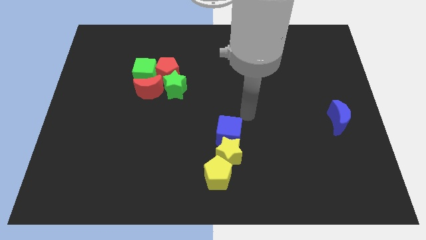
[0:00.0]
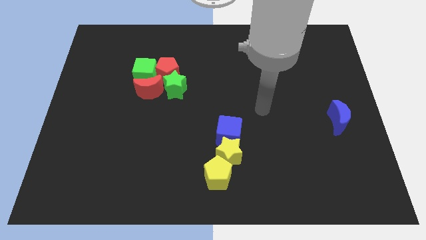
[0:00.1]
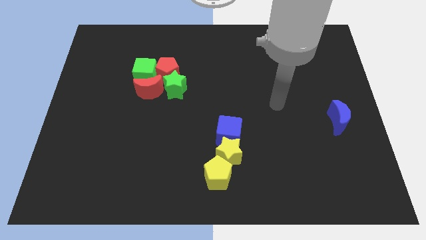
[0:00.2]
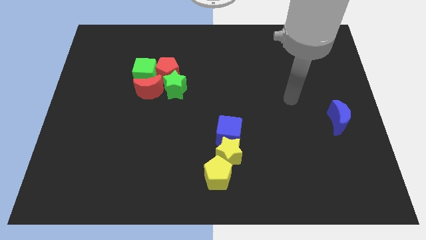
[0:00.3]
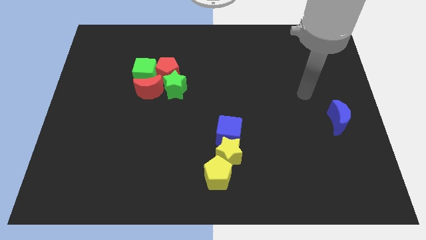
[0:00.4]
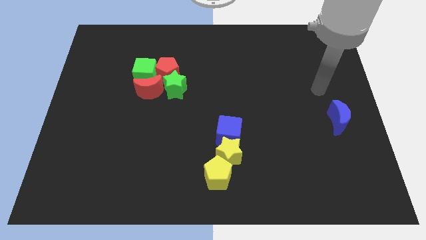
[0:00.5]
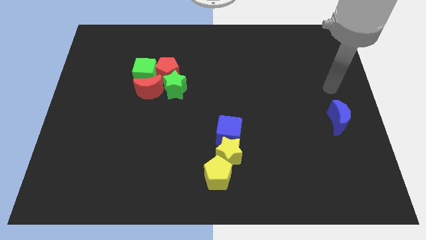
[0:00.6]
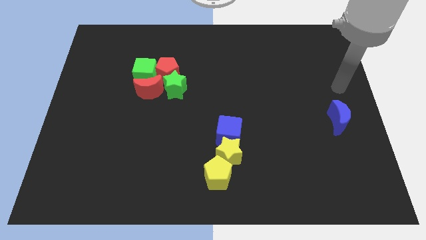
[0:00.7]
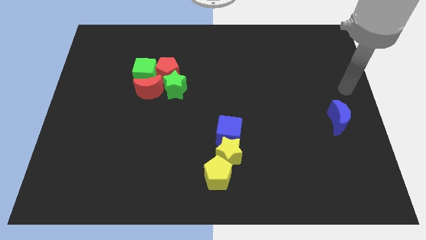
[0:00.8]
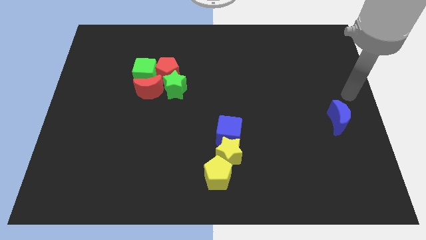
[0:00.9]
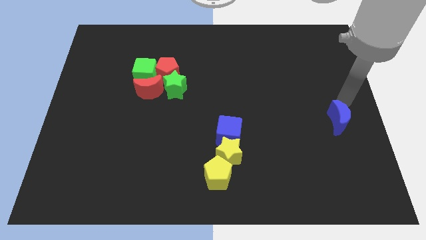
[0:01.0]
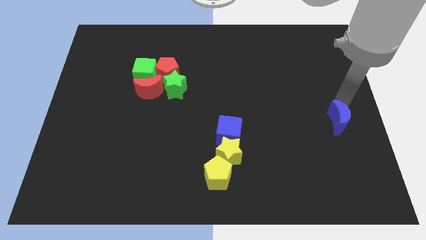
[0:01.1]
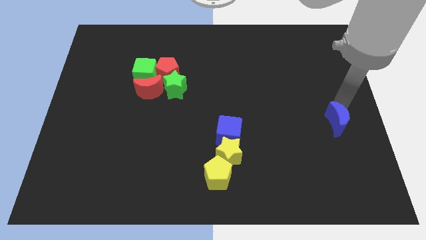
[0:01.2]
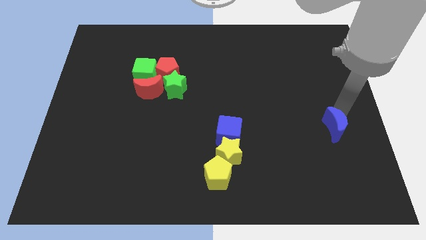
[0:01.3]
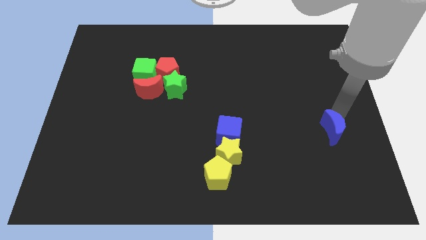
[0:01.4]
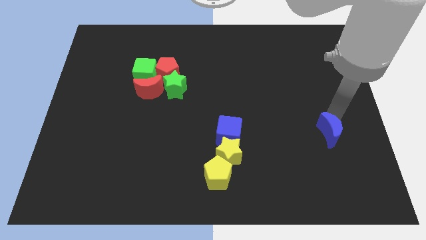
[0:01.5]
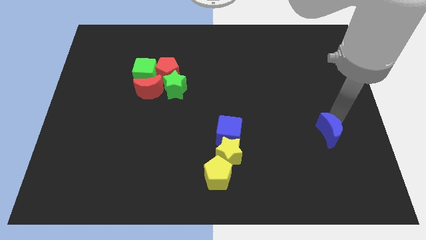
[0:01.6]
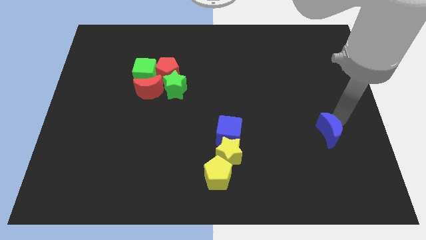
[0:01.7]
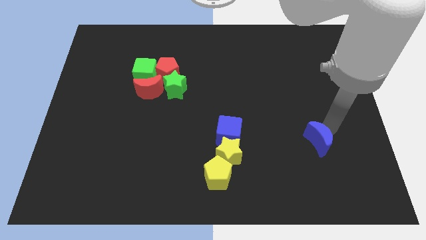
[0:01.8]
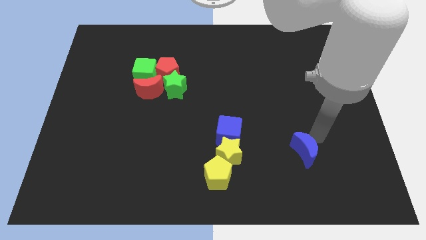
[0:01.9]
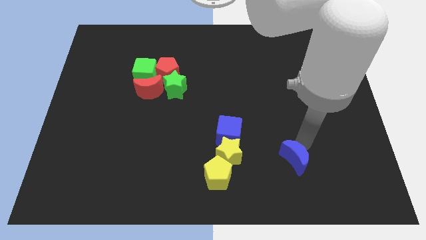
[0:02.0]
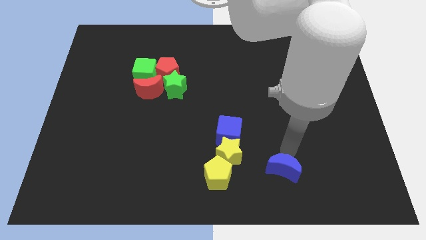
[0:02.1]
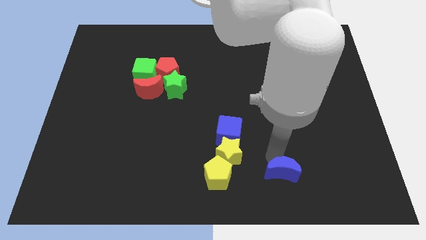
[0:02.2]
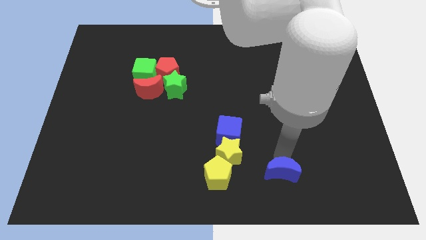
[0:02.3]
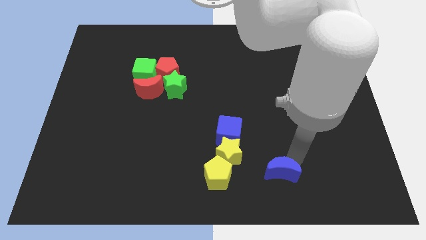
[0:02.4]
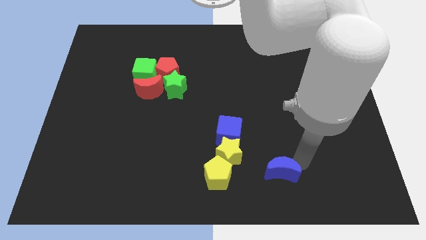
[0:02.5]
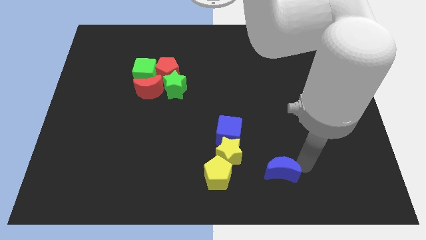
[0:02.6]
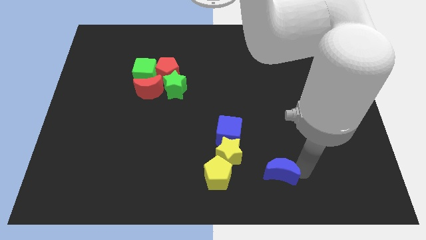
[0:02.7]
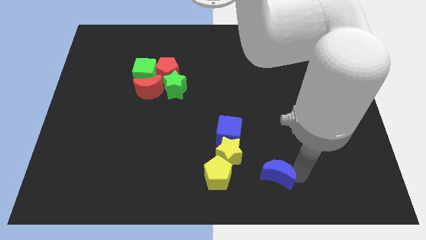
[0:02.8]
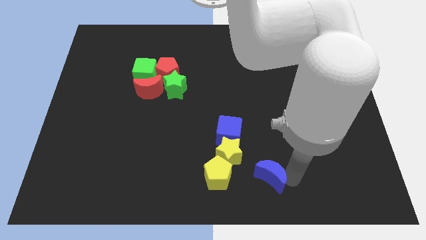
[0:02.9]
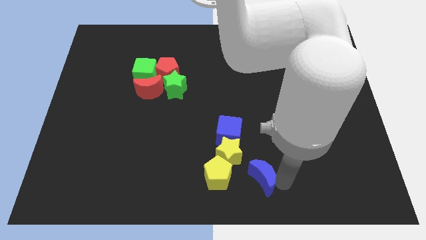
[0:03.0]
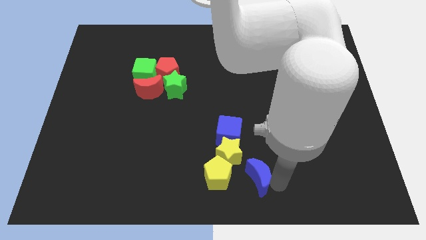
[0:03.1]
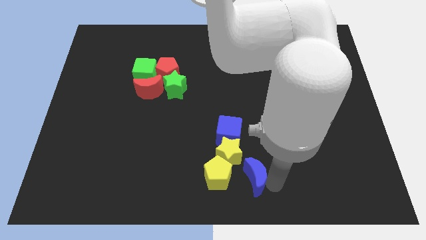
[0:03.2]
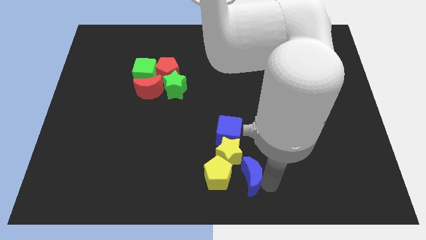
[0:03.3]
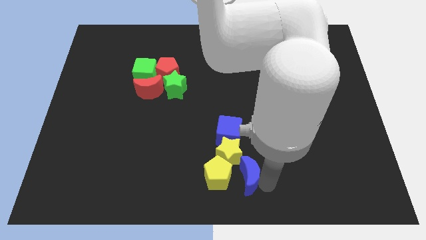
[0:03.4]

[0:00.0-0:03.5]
push the blue moon close to the right side of the yellow blocks

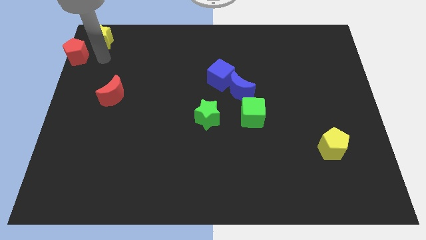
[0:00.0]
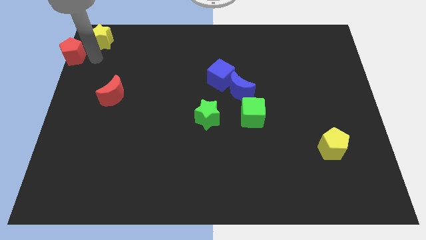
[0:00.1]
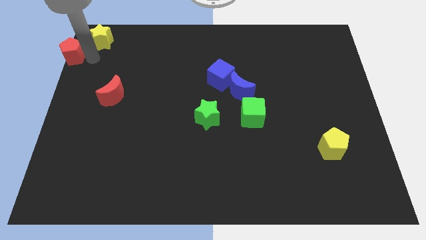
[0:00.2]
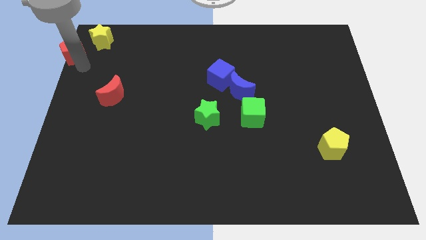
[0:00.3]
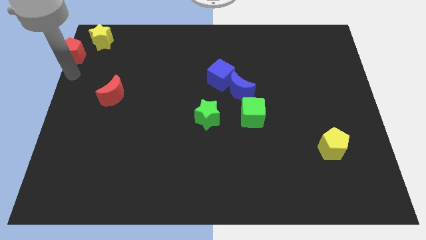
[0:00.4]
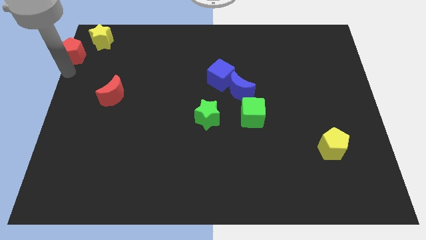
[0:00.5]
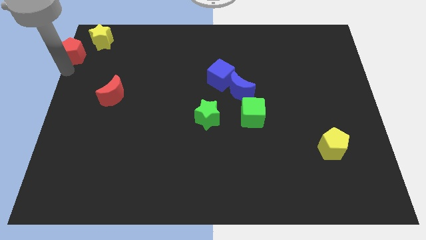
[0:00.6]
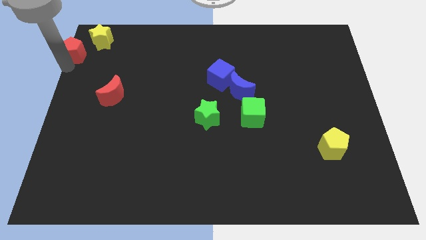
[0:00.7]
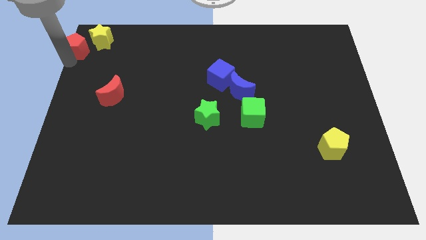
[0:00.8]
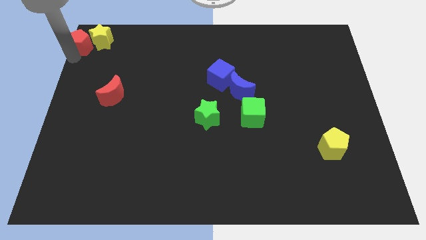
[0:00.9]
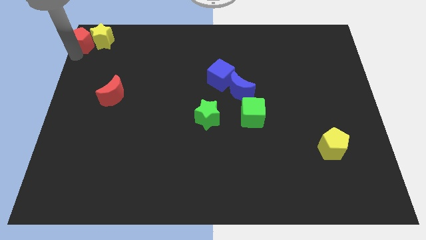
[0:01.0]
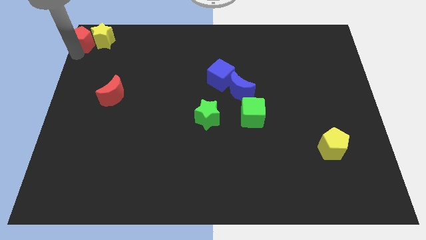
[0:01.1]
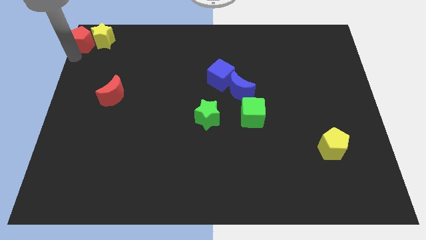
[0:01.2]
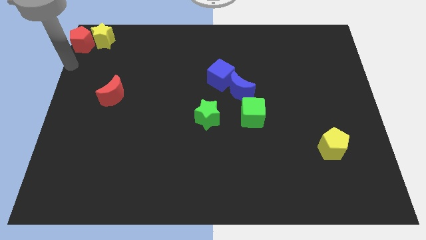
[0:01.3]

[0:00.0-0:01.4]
move the yellow star and the red pentagon to the top left corner of the board

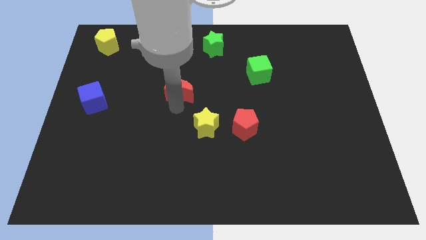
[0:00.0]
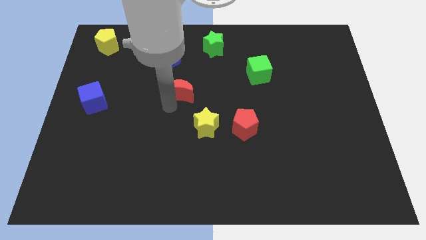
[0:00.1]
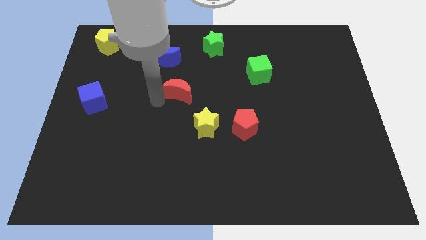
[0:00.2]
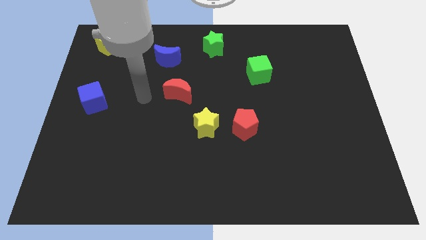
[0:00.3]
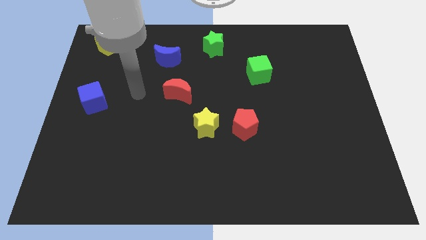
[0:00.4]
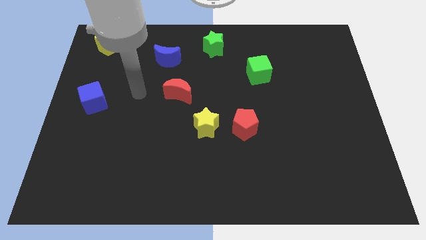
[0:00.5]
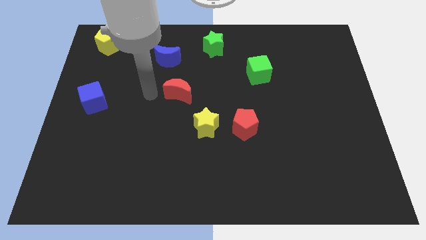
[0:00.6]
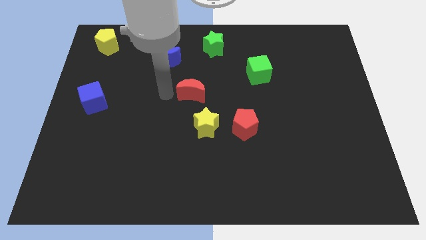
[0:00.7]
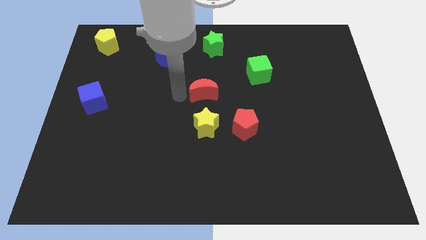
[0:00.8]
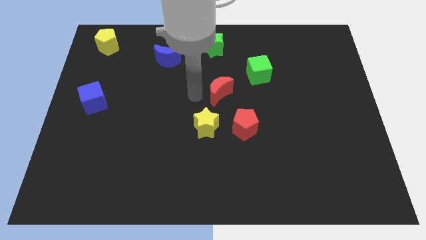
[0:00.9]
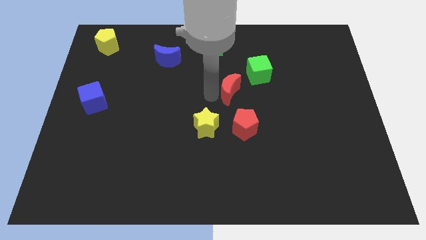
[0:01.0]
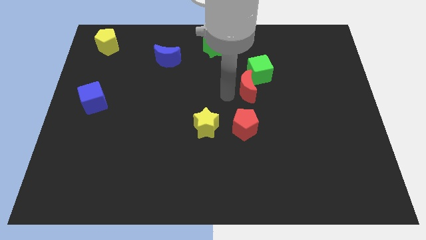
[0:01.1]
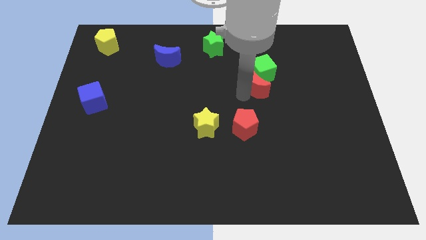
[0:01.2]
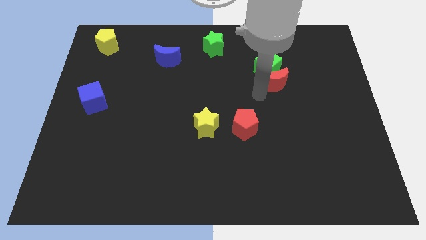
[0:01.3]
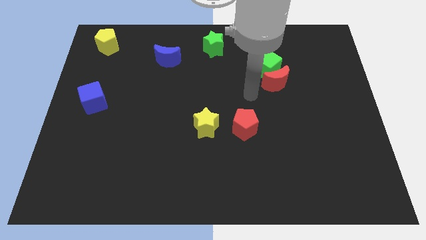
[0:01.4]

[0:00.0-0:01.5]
bring the red crescent at the bottom side of the green cube

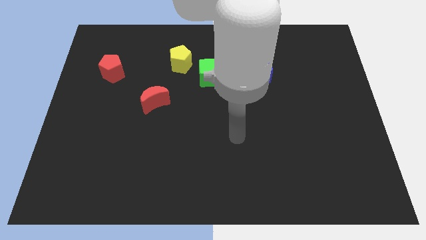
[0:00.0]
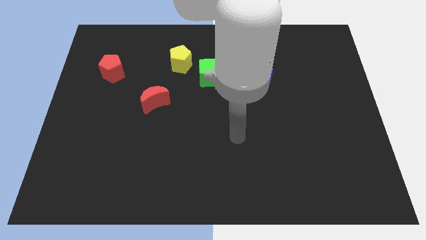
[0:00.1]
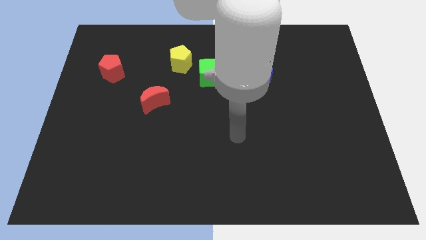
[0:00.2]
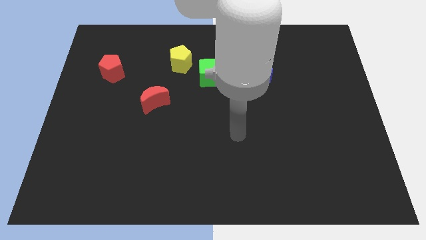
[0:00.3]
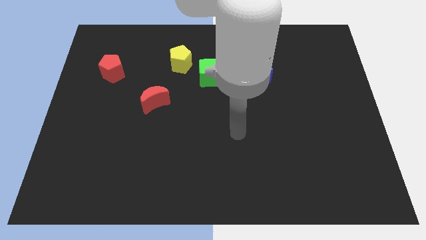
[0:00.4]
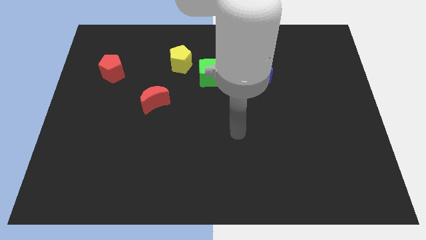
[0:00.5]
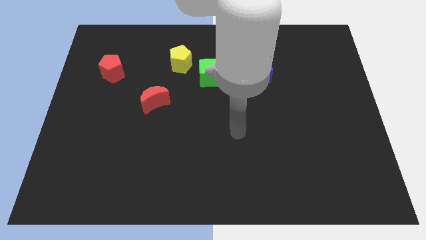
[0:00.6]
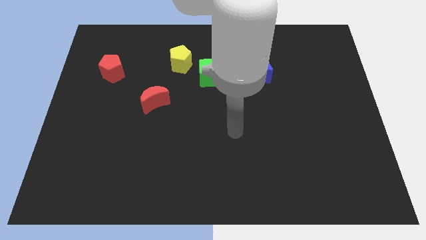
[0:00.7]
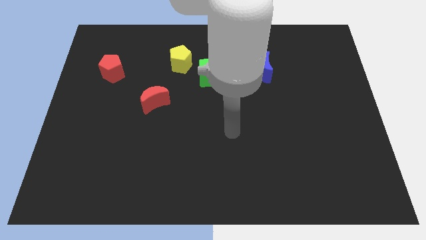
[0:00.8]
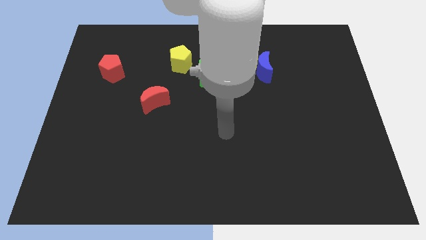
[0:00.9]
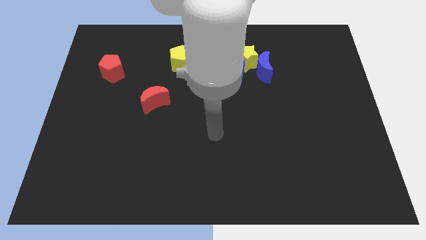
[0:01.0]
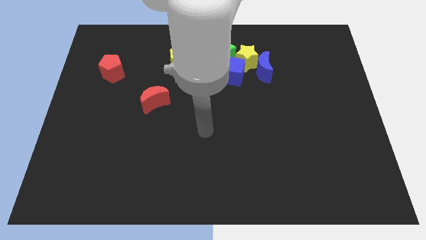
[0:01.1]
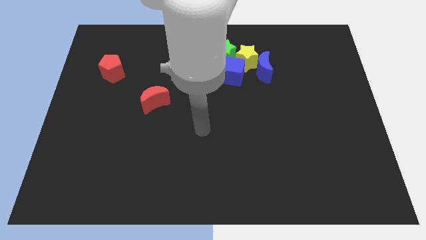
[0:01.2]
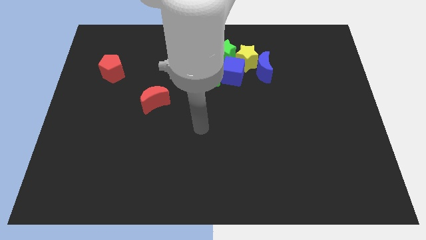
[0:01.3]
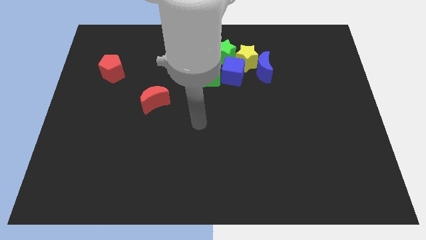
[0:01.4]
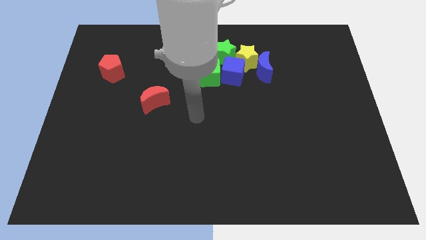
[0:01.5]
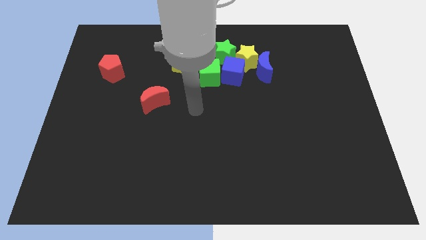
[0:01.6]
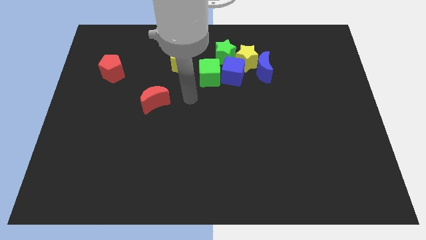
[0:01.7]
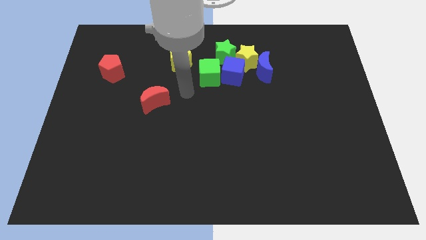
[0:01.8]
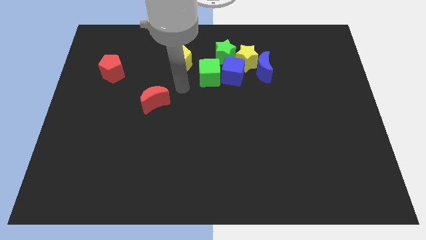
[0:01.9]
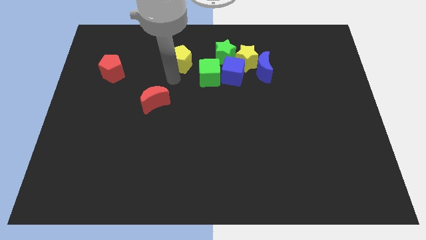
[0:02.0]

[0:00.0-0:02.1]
move the arm below the yellow pentagon

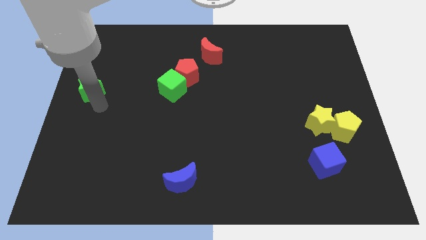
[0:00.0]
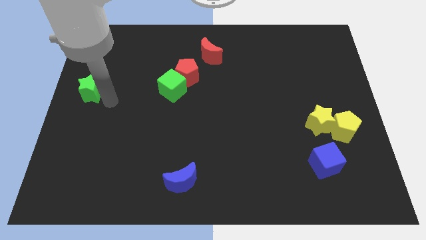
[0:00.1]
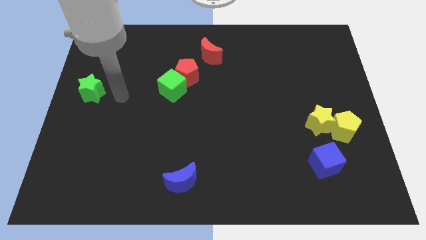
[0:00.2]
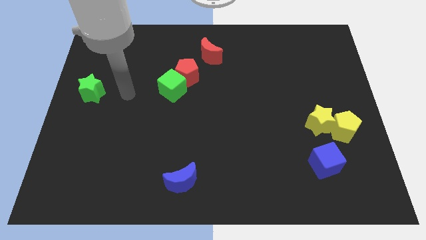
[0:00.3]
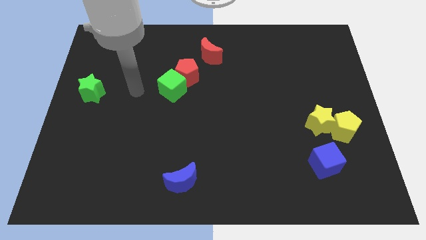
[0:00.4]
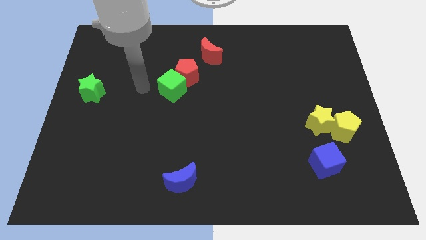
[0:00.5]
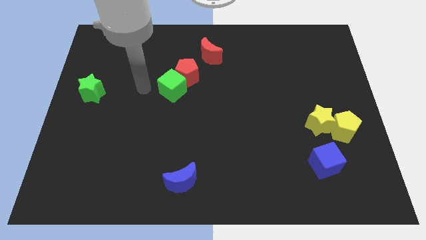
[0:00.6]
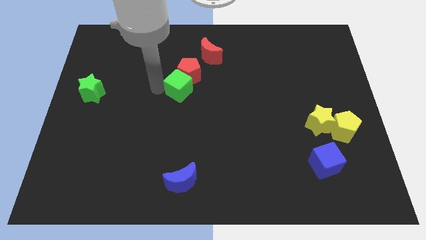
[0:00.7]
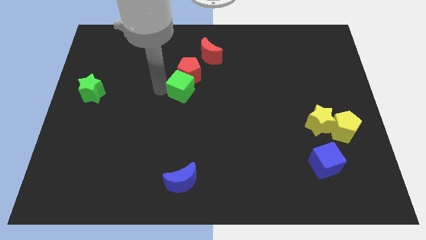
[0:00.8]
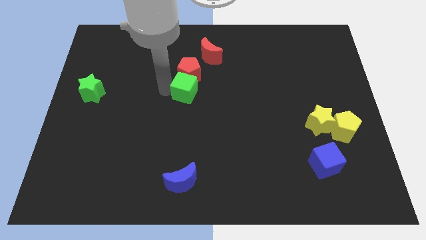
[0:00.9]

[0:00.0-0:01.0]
place green cube to the bottom of red pentagon
